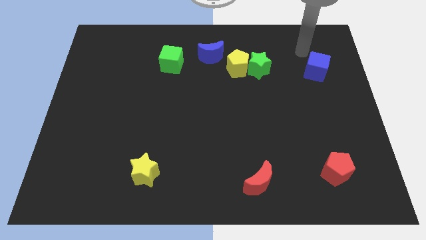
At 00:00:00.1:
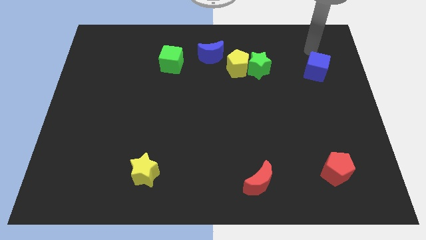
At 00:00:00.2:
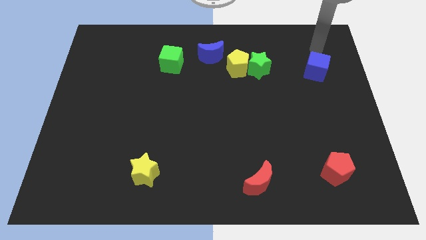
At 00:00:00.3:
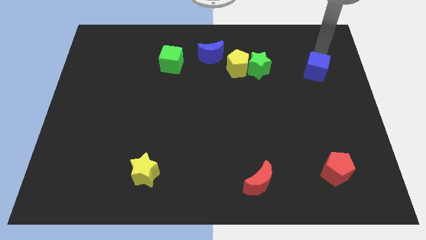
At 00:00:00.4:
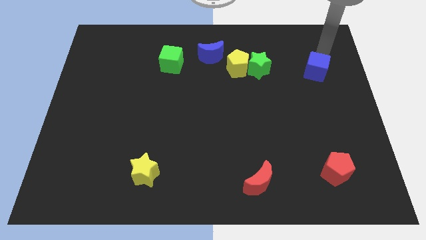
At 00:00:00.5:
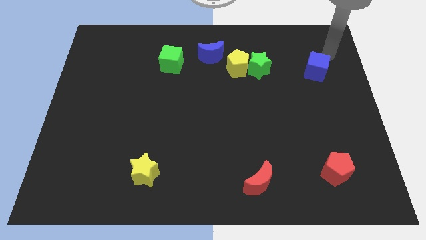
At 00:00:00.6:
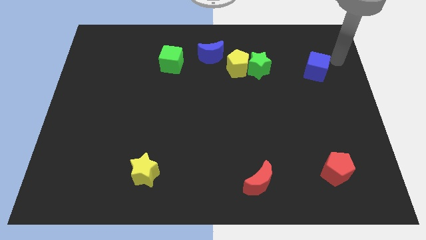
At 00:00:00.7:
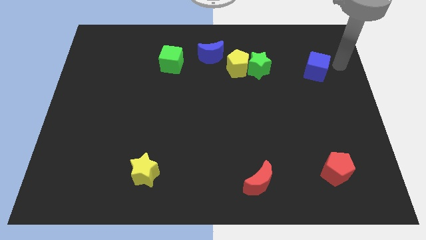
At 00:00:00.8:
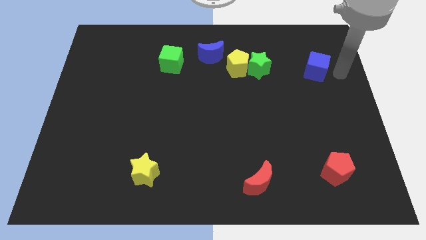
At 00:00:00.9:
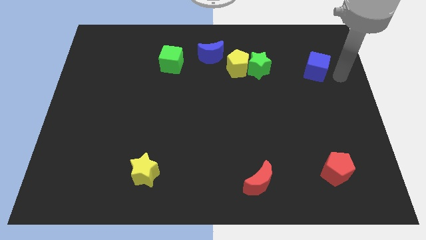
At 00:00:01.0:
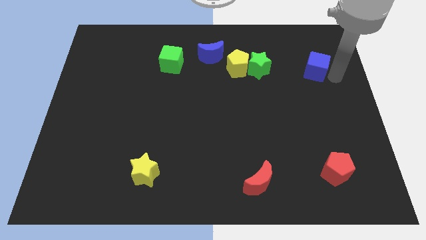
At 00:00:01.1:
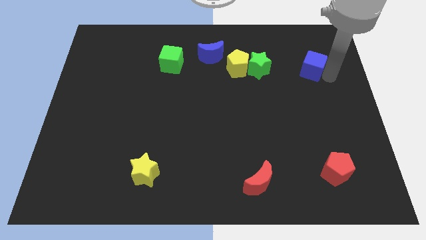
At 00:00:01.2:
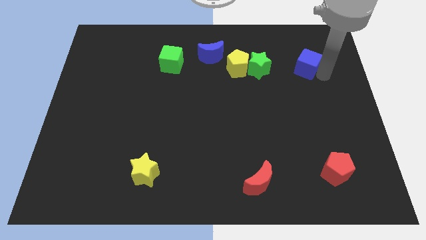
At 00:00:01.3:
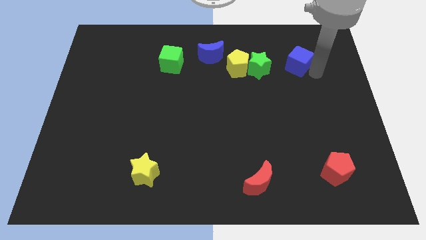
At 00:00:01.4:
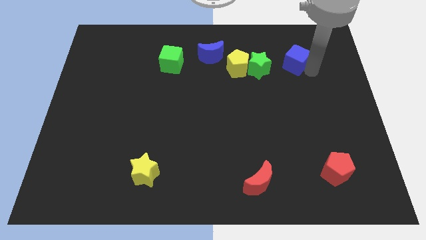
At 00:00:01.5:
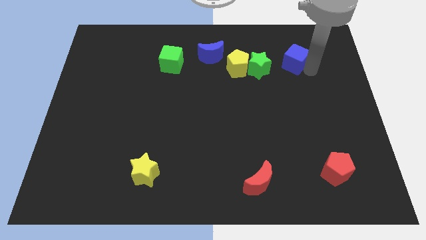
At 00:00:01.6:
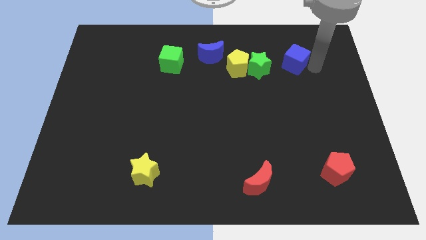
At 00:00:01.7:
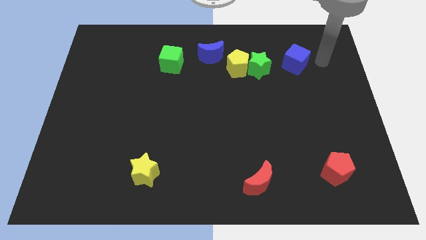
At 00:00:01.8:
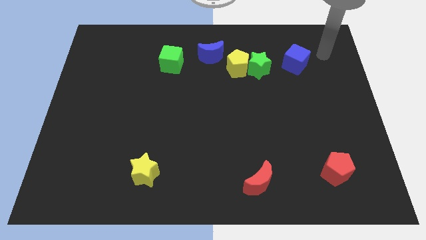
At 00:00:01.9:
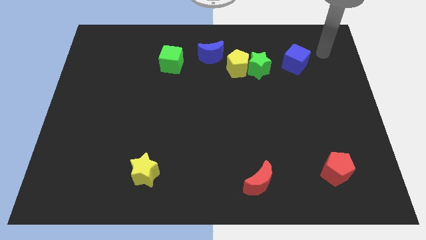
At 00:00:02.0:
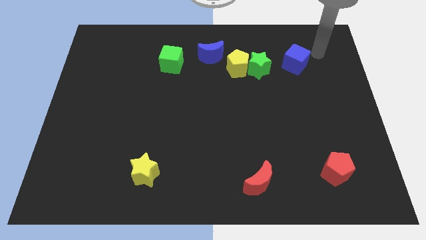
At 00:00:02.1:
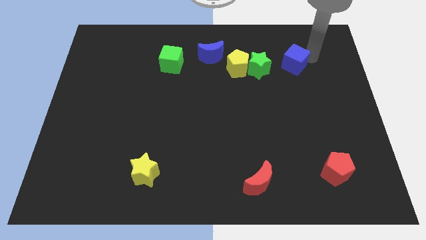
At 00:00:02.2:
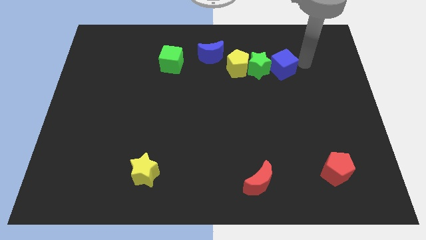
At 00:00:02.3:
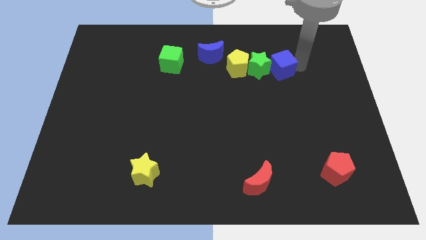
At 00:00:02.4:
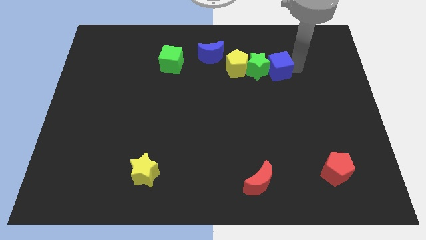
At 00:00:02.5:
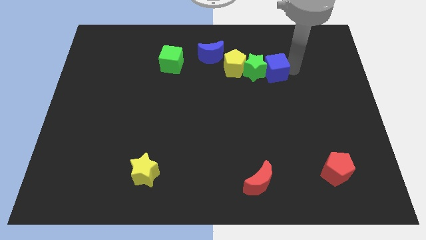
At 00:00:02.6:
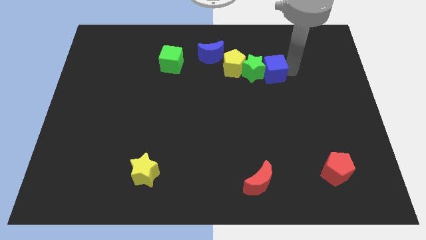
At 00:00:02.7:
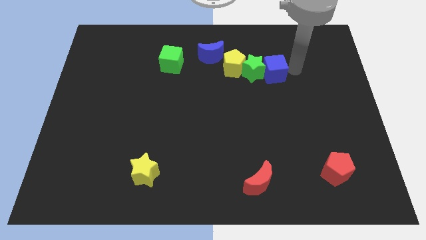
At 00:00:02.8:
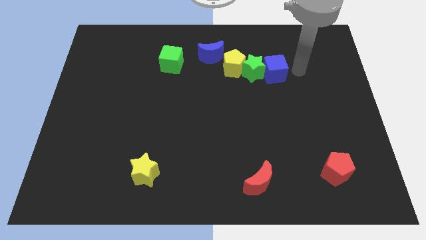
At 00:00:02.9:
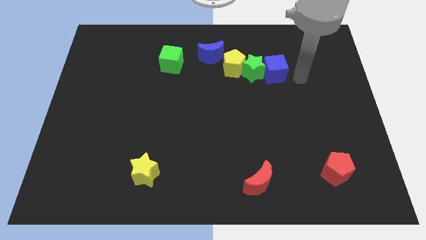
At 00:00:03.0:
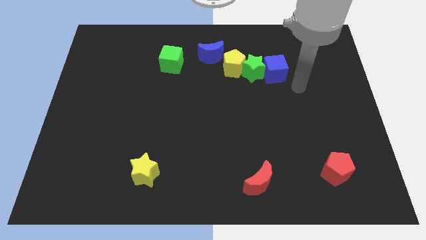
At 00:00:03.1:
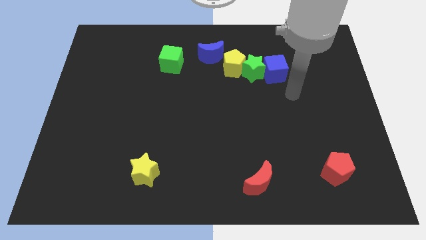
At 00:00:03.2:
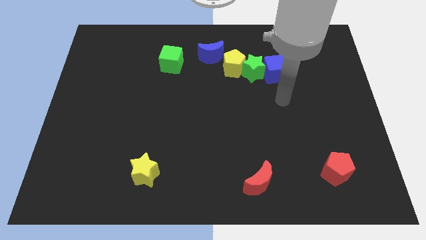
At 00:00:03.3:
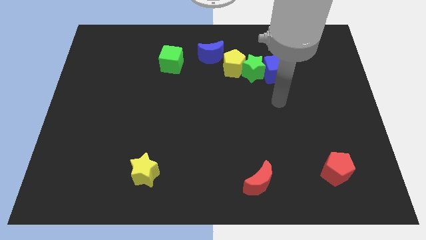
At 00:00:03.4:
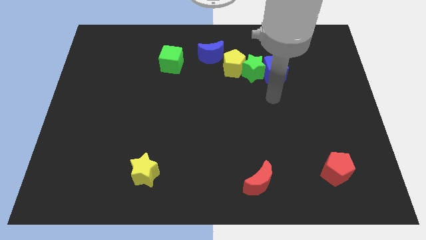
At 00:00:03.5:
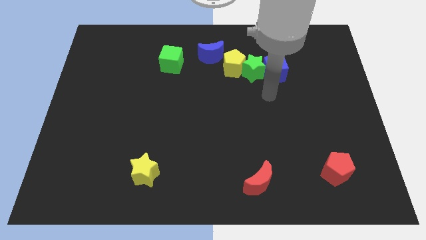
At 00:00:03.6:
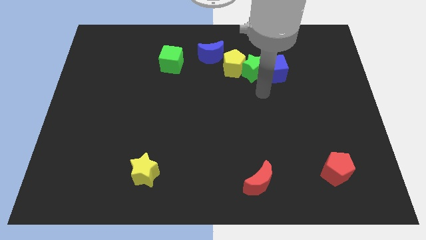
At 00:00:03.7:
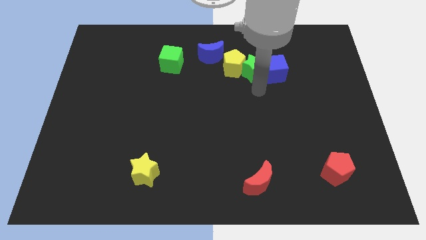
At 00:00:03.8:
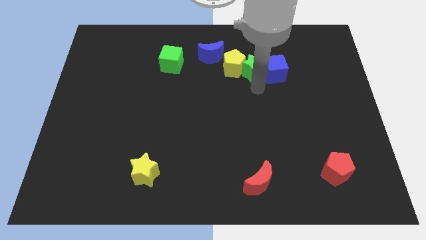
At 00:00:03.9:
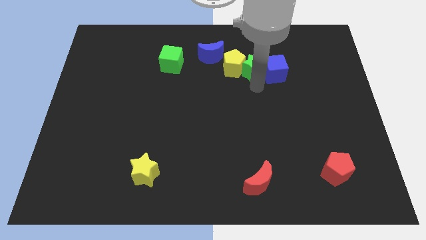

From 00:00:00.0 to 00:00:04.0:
push the blue cube close to the green star

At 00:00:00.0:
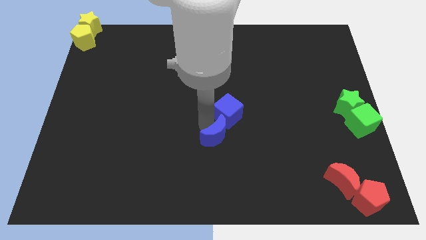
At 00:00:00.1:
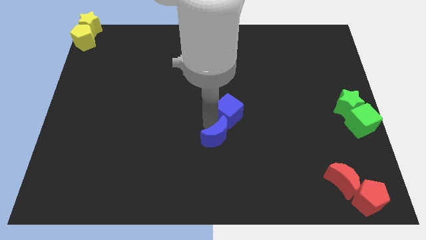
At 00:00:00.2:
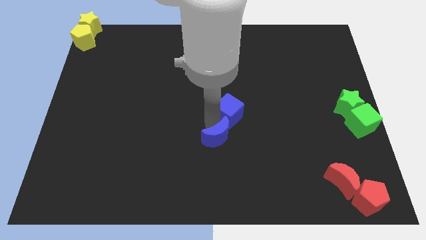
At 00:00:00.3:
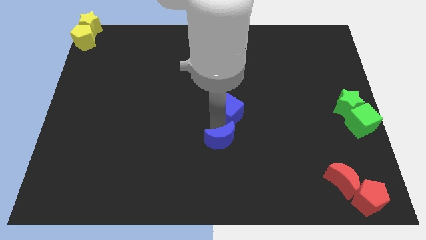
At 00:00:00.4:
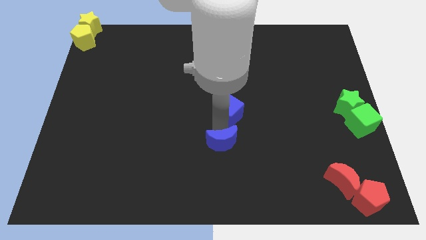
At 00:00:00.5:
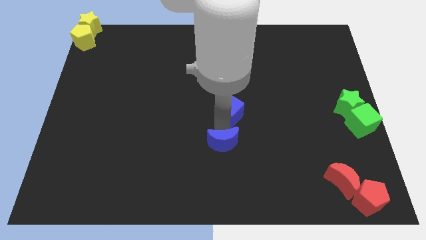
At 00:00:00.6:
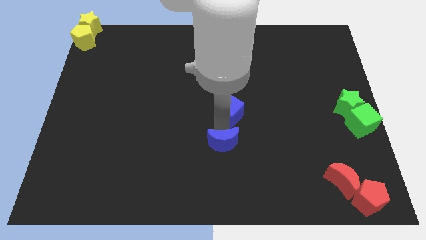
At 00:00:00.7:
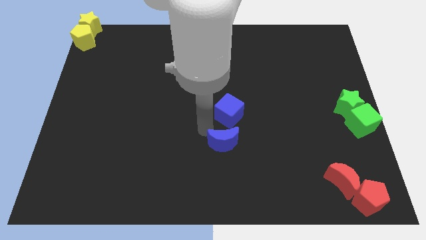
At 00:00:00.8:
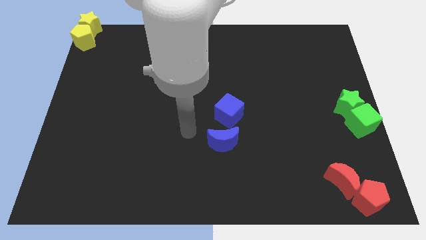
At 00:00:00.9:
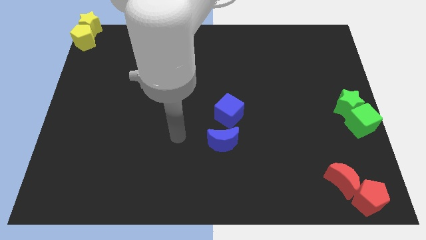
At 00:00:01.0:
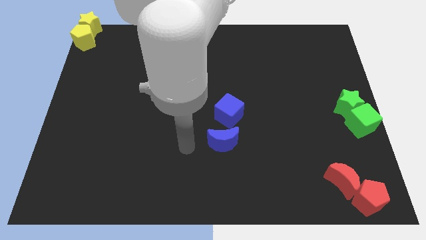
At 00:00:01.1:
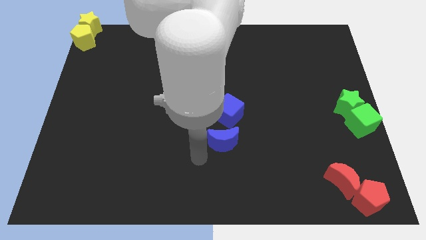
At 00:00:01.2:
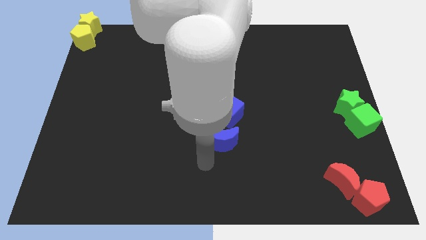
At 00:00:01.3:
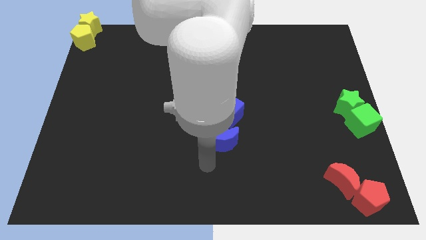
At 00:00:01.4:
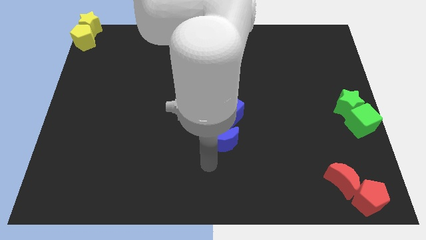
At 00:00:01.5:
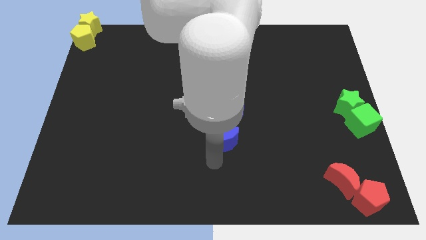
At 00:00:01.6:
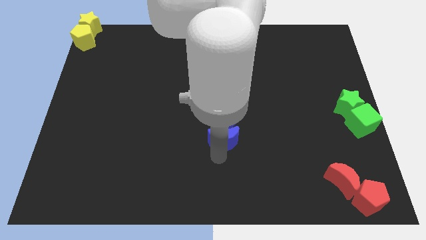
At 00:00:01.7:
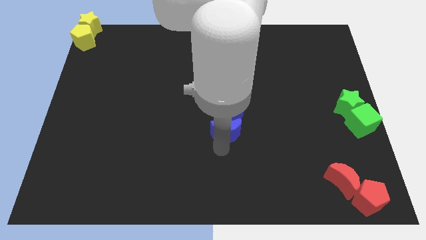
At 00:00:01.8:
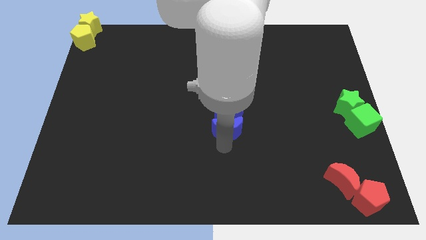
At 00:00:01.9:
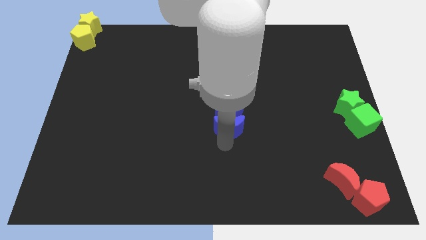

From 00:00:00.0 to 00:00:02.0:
place blue crescent below blue cube

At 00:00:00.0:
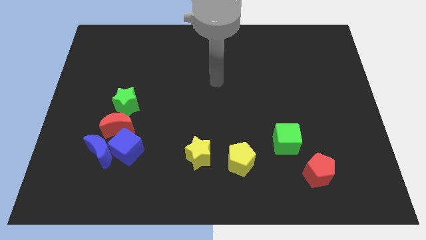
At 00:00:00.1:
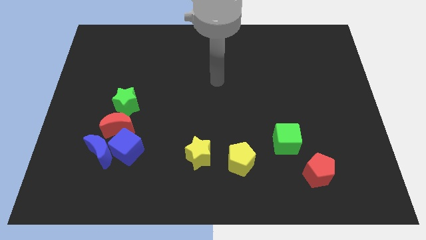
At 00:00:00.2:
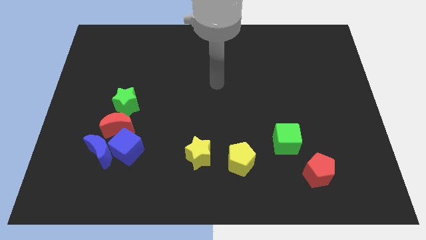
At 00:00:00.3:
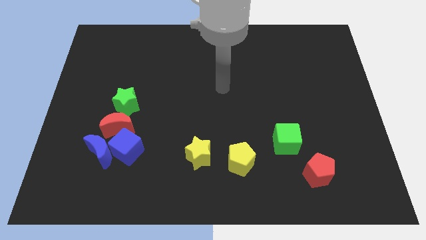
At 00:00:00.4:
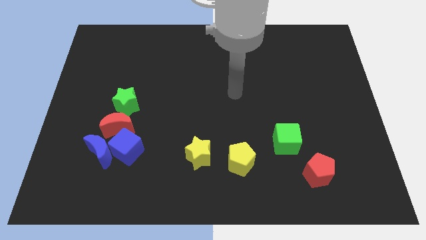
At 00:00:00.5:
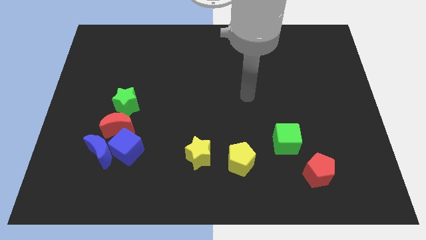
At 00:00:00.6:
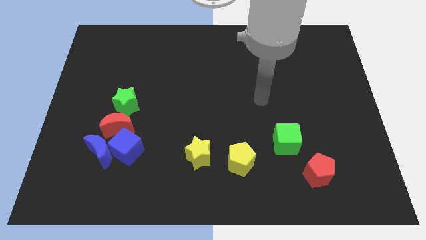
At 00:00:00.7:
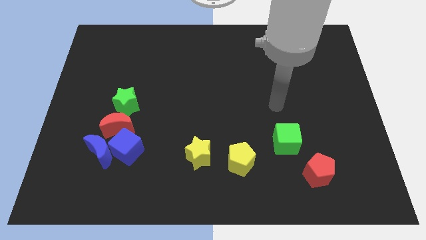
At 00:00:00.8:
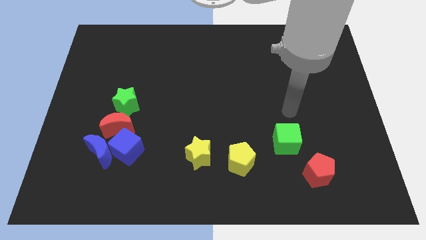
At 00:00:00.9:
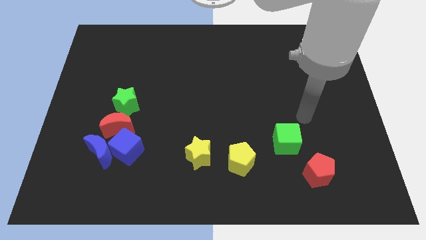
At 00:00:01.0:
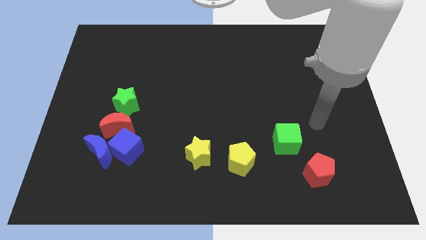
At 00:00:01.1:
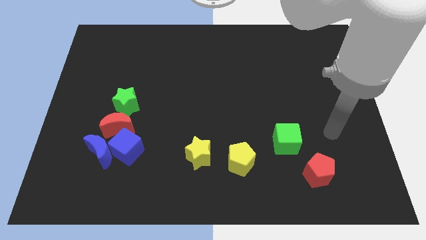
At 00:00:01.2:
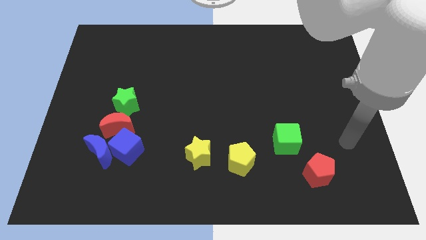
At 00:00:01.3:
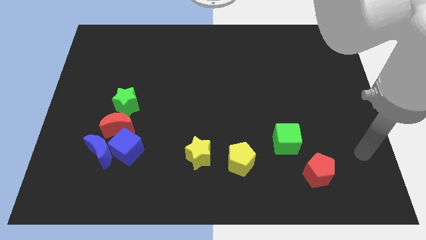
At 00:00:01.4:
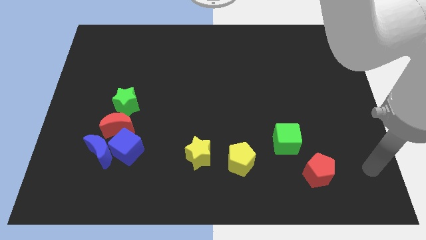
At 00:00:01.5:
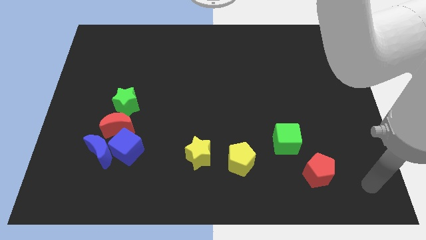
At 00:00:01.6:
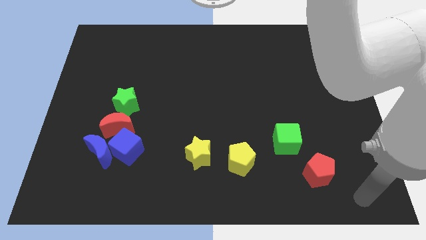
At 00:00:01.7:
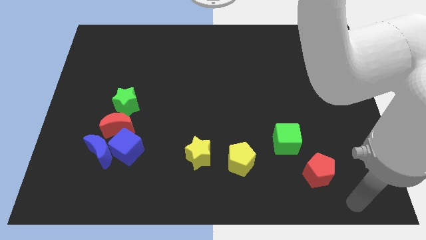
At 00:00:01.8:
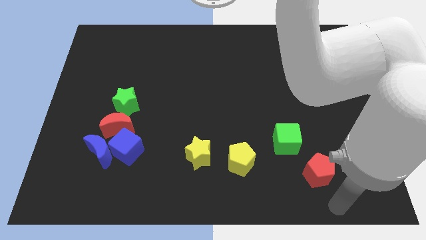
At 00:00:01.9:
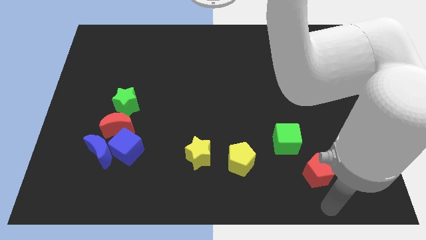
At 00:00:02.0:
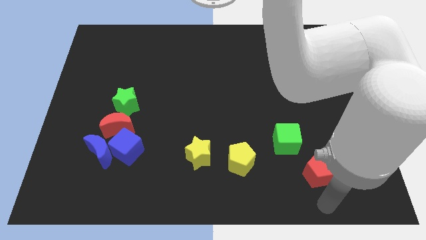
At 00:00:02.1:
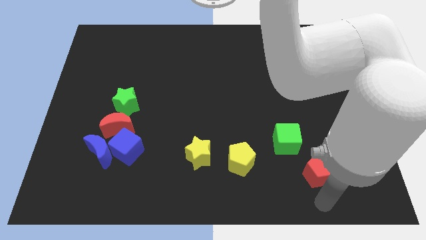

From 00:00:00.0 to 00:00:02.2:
place your arm below the red pentagon

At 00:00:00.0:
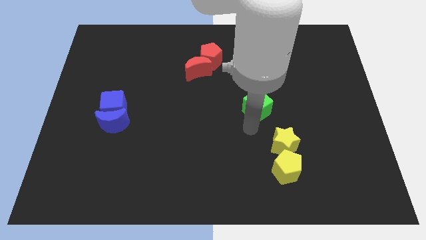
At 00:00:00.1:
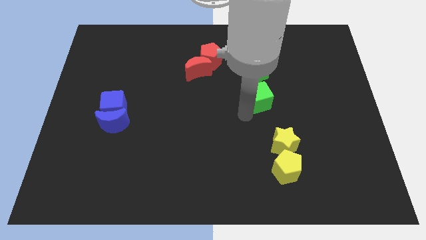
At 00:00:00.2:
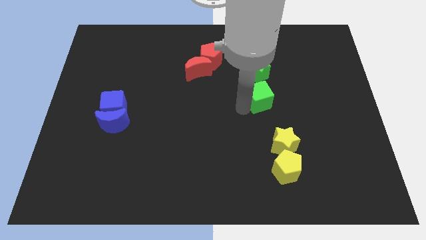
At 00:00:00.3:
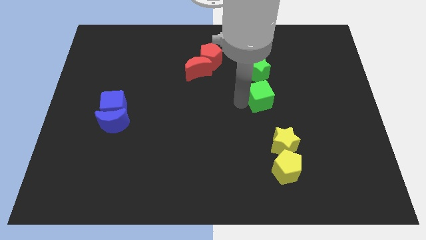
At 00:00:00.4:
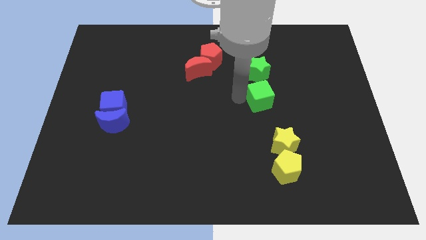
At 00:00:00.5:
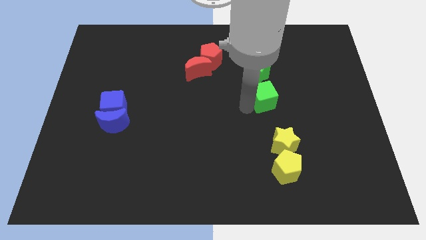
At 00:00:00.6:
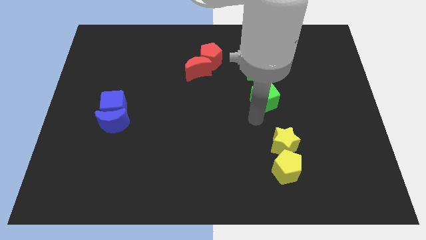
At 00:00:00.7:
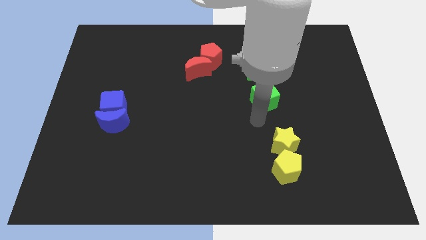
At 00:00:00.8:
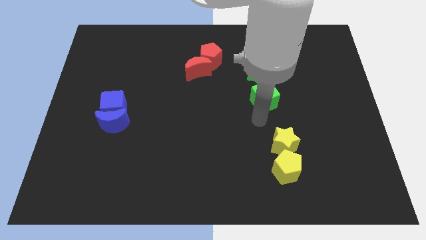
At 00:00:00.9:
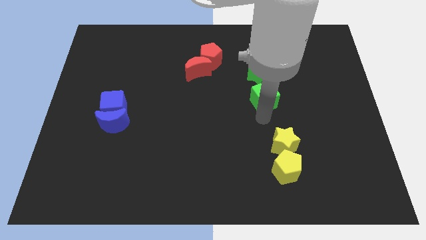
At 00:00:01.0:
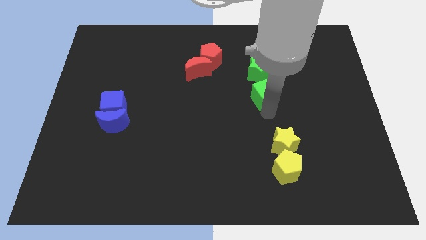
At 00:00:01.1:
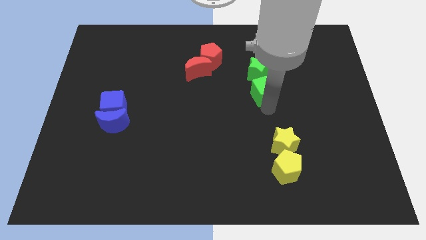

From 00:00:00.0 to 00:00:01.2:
move the green cube slightly to the top
